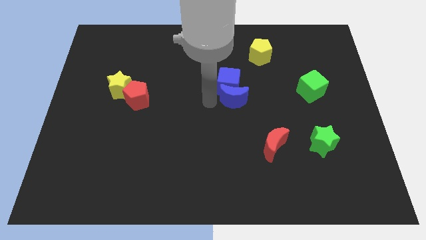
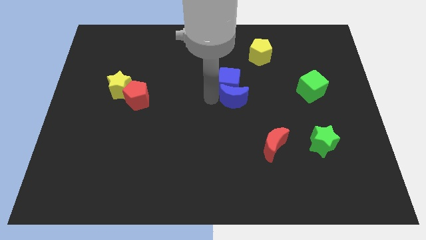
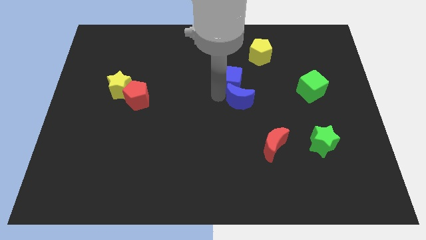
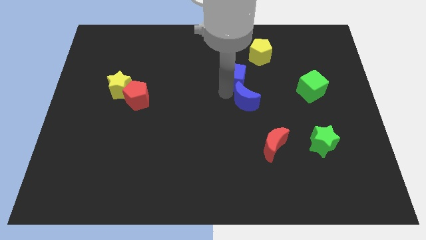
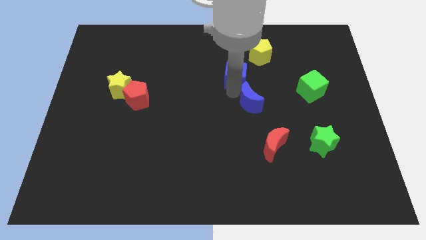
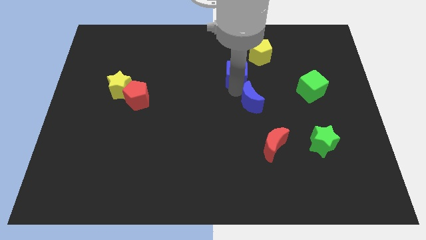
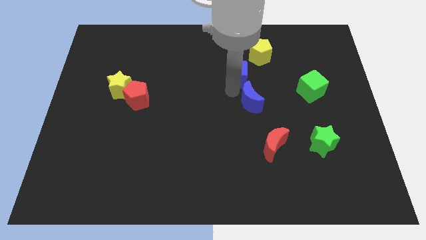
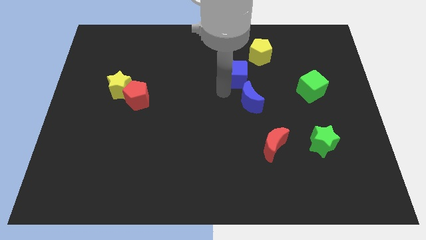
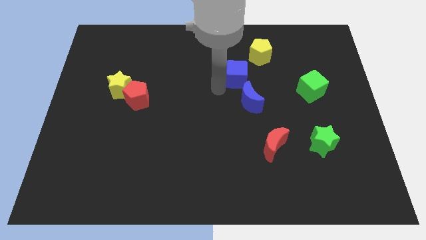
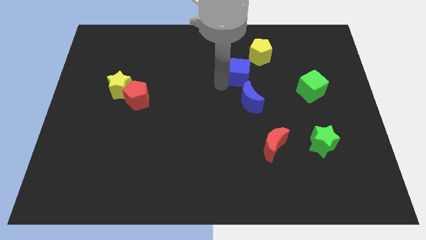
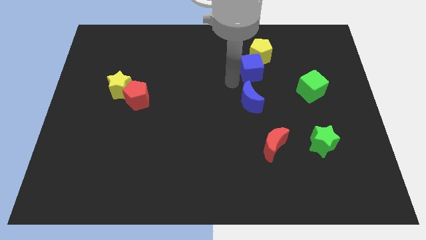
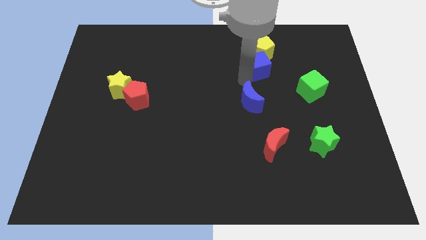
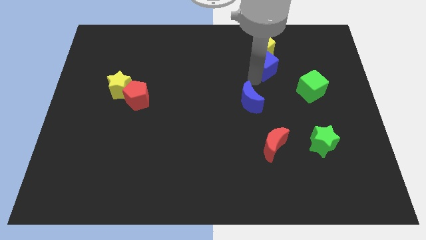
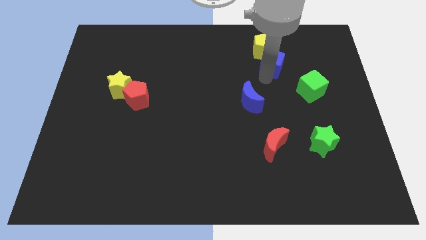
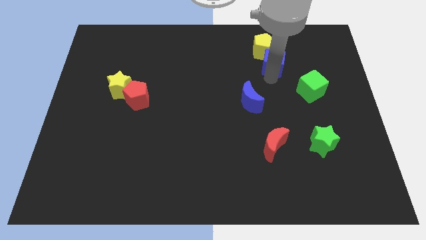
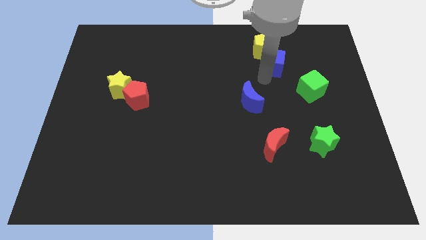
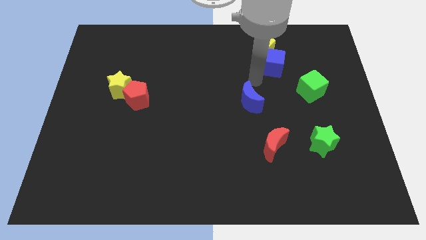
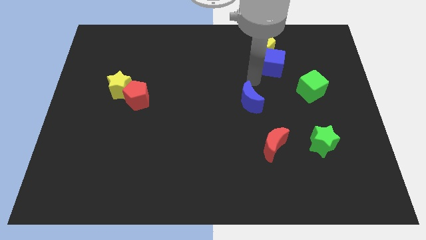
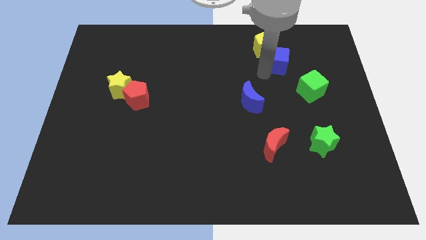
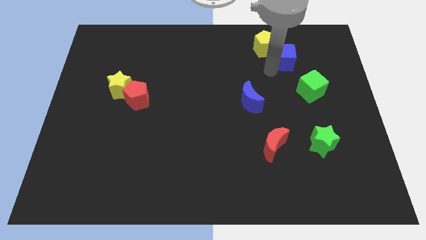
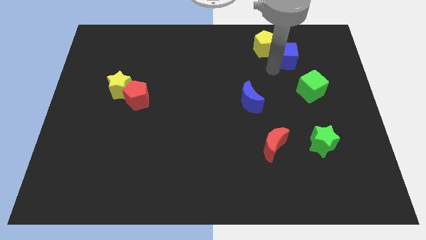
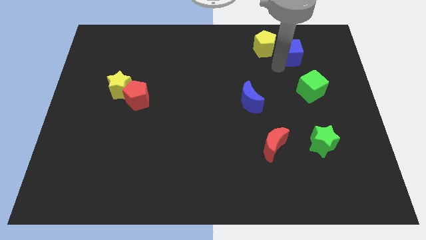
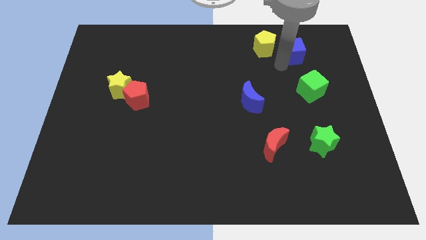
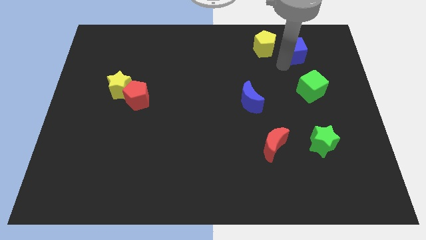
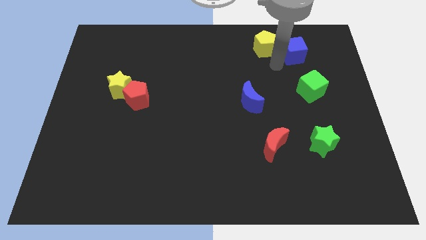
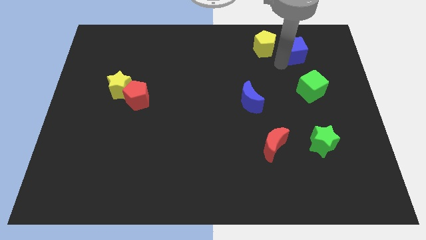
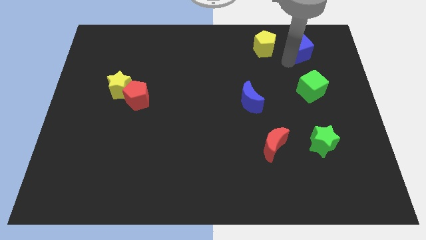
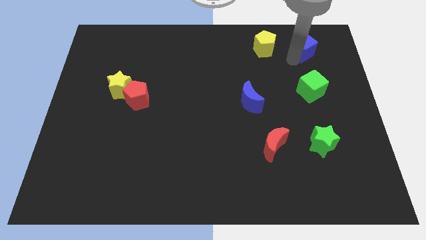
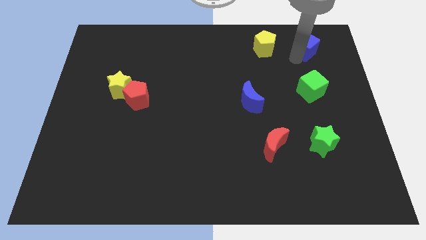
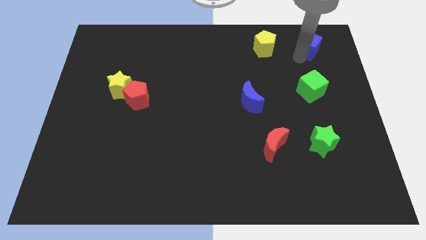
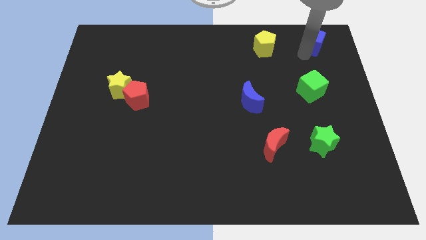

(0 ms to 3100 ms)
separate blue cube from blue moon

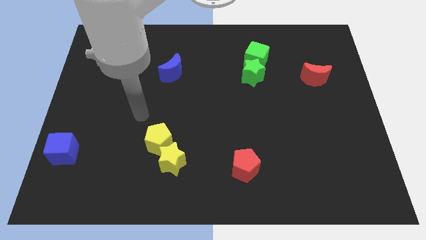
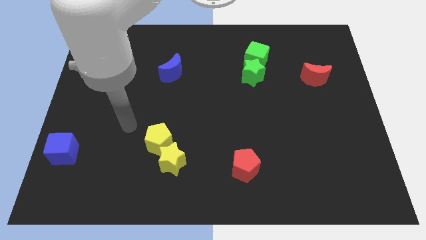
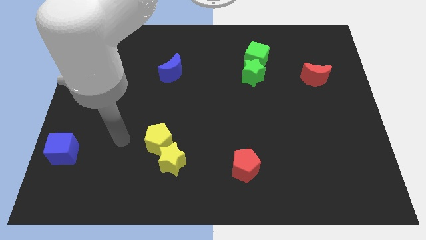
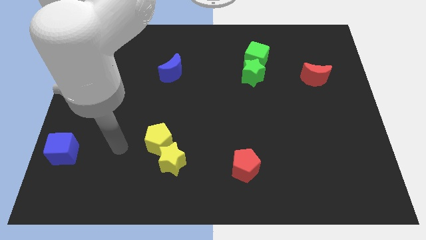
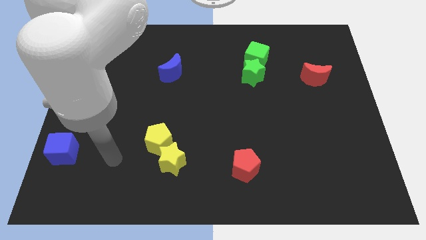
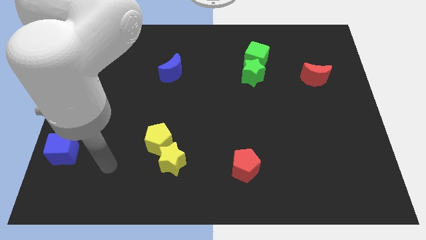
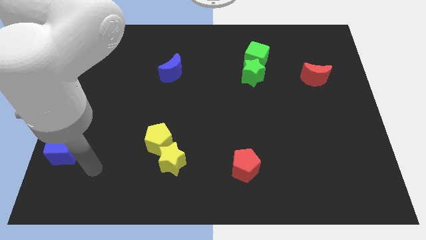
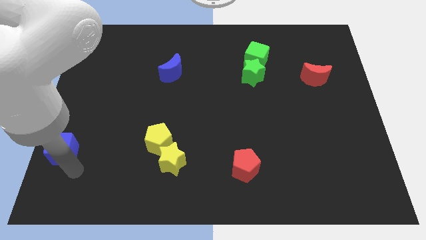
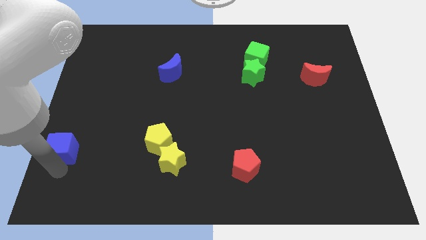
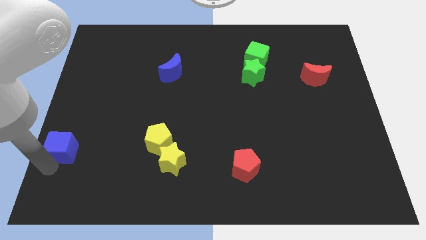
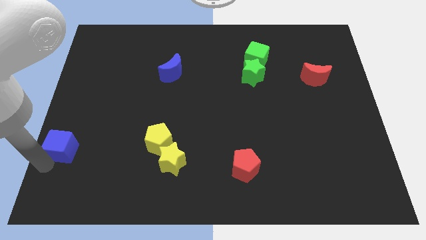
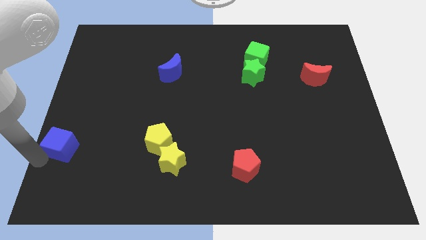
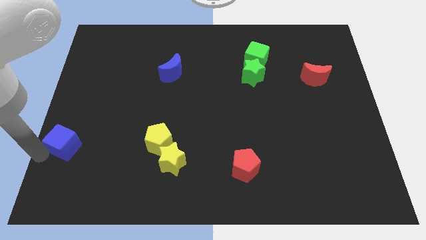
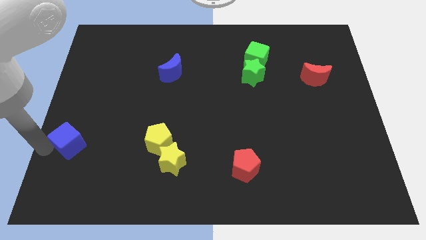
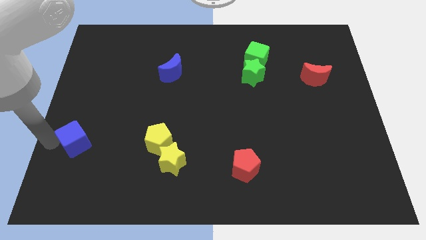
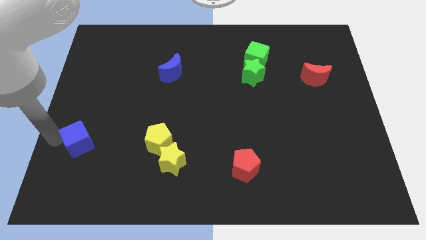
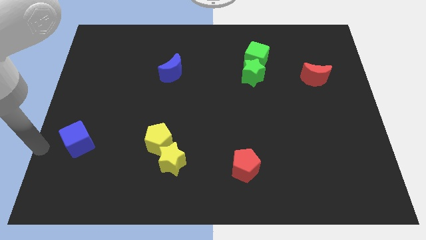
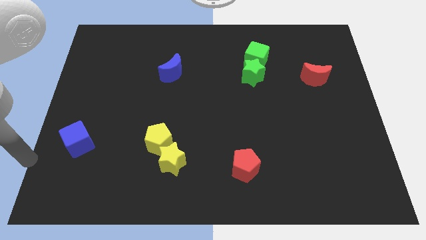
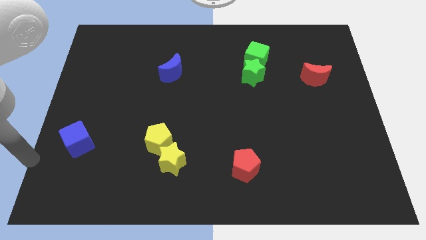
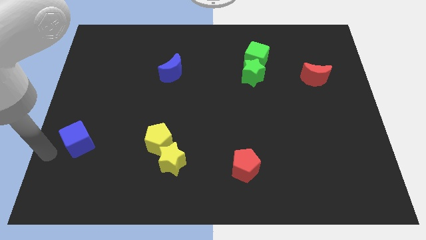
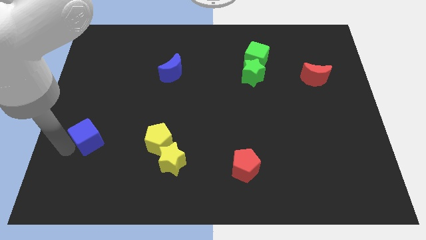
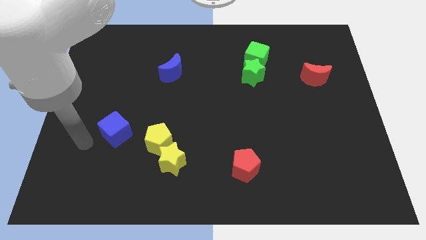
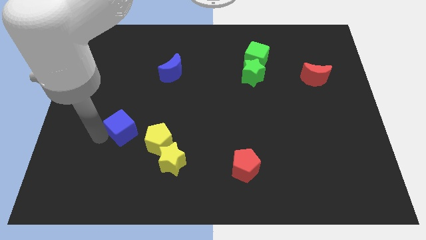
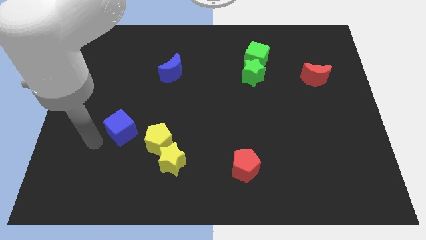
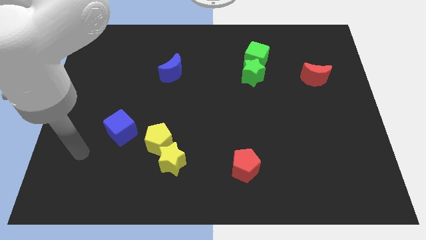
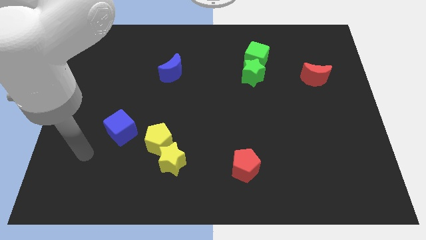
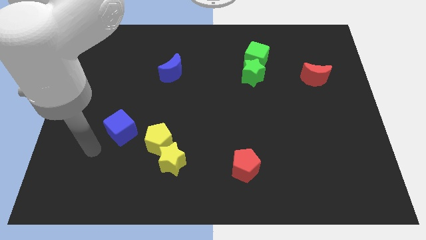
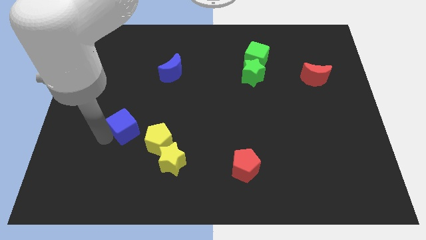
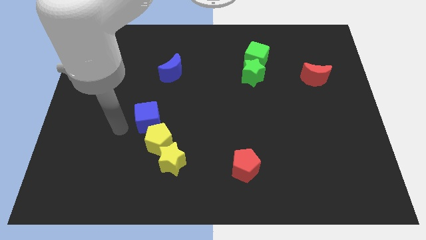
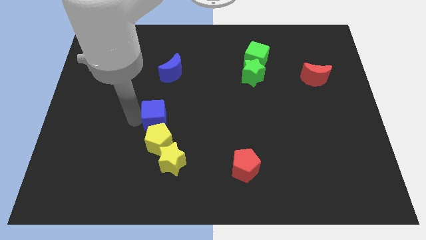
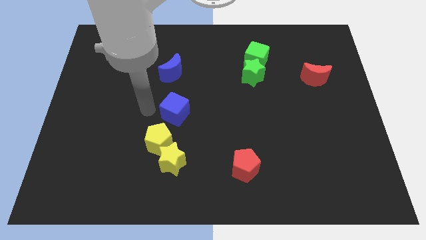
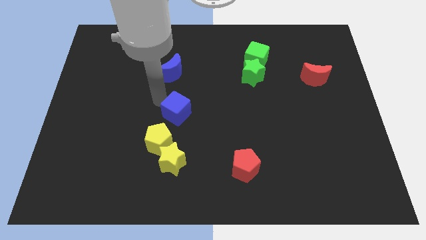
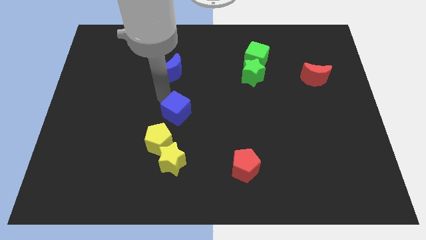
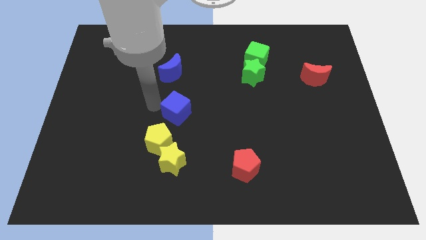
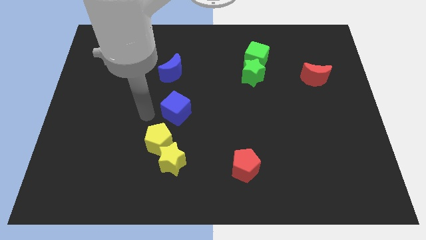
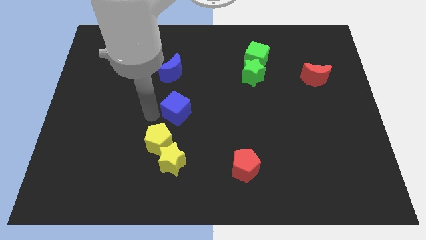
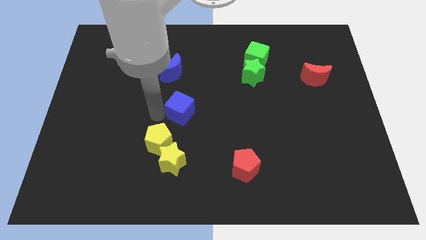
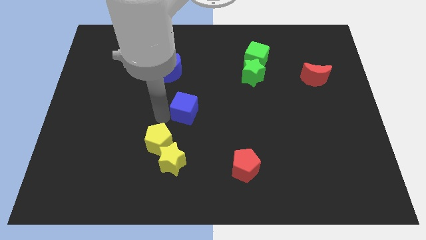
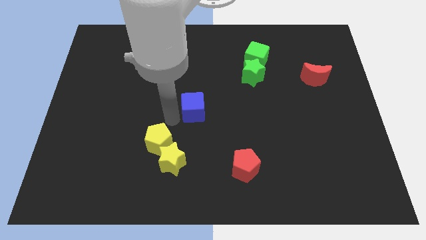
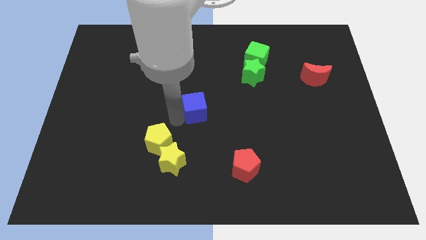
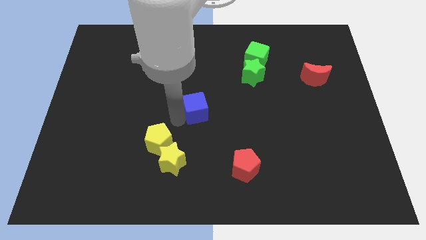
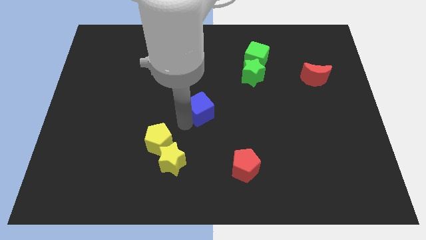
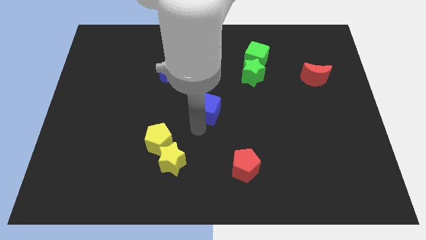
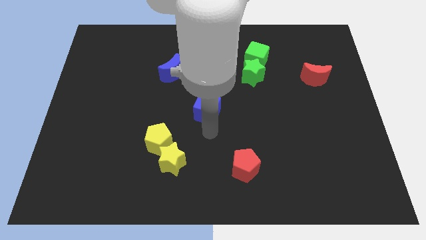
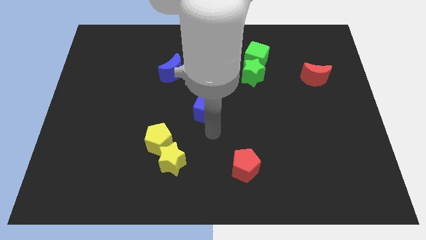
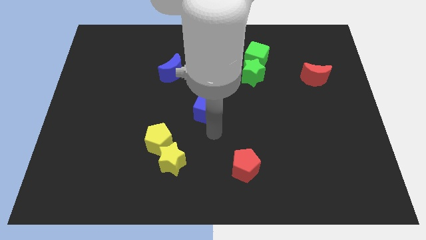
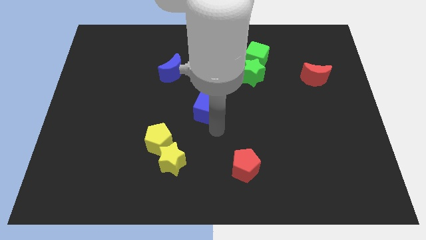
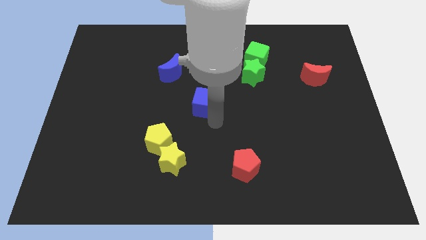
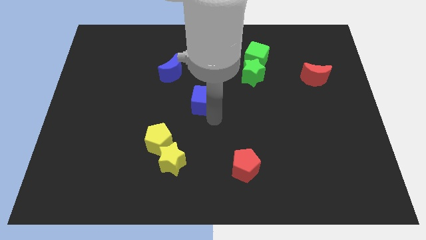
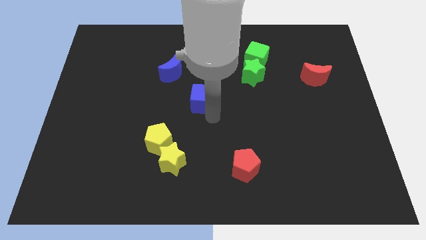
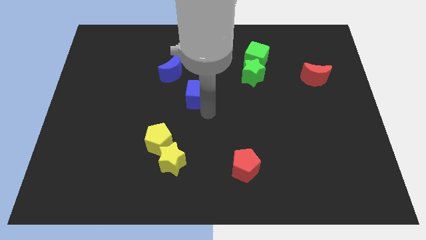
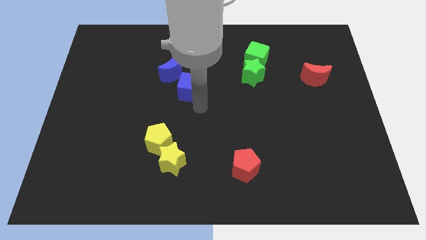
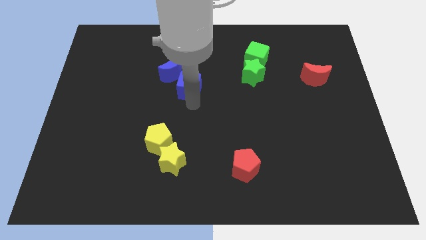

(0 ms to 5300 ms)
push the blue cube closer to the blue moon

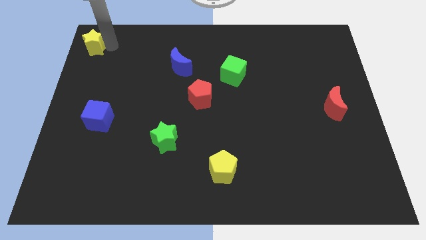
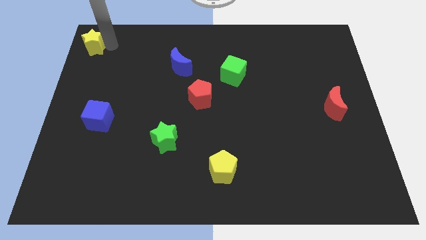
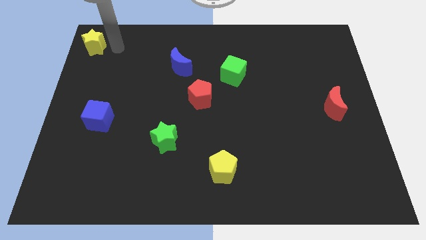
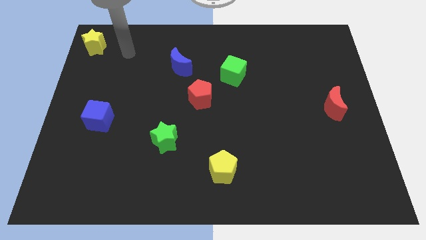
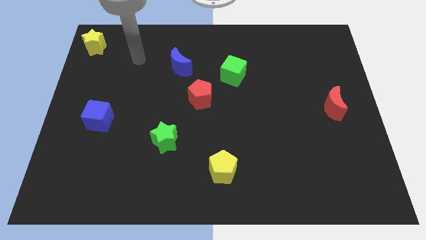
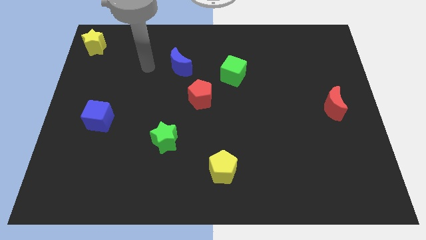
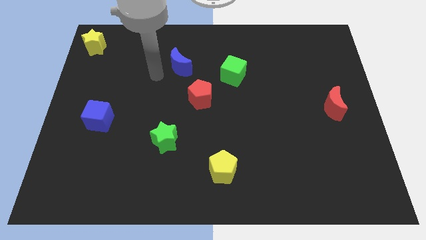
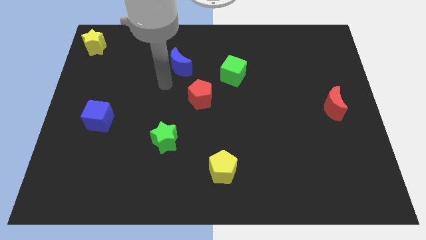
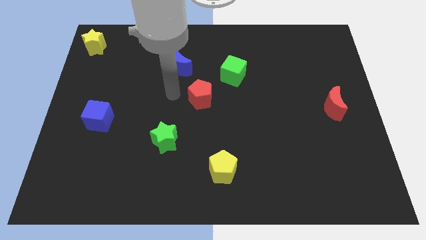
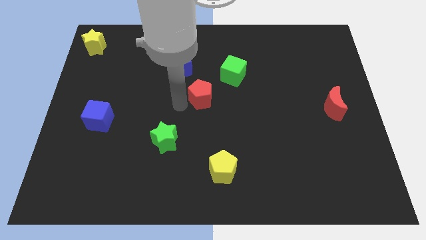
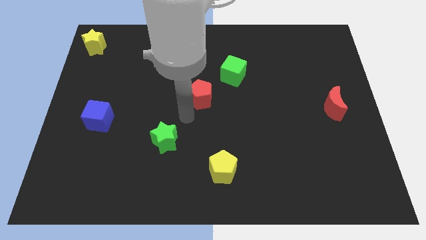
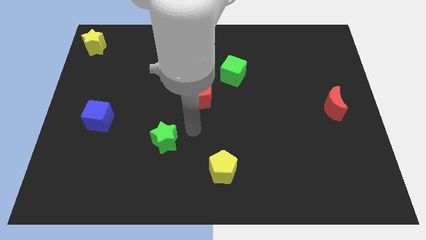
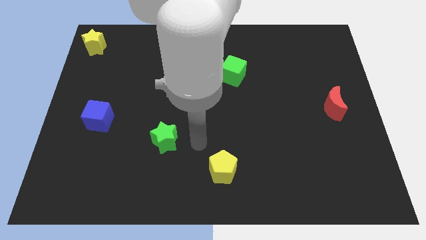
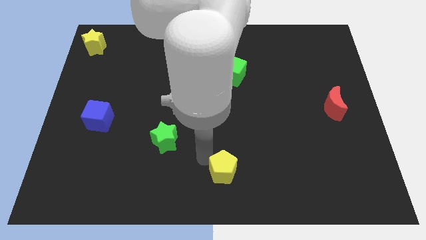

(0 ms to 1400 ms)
move your arm away from the yellow star
